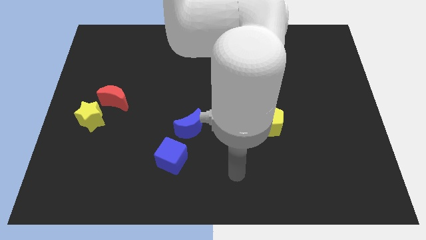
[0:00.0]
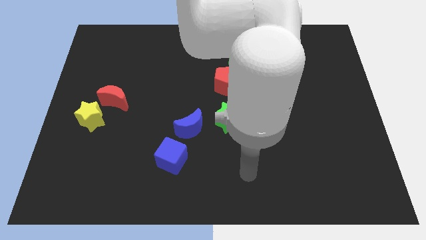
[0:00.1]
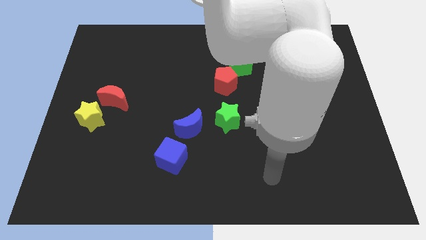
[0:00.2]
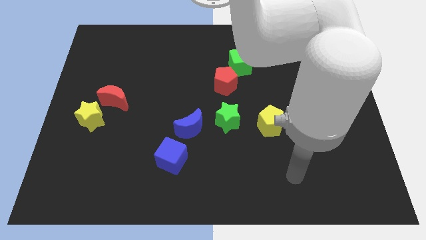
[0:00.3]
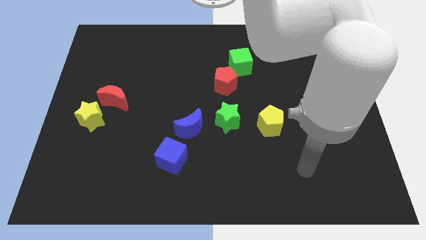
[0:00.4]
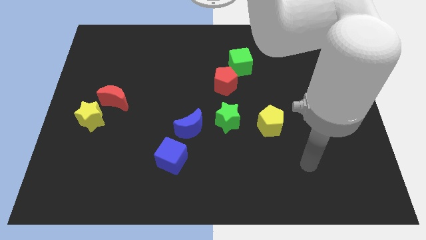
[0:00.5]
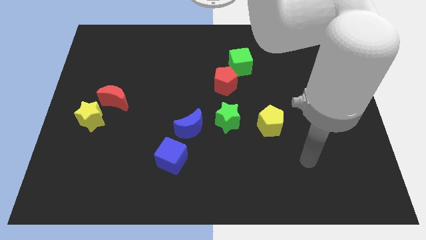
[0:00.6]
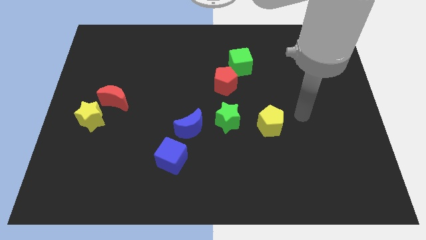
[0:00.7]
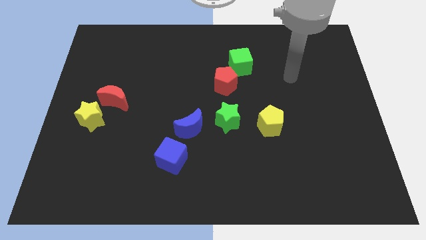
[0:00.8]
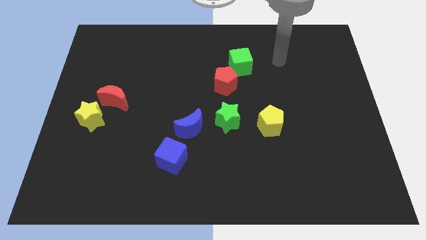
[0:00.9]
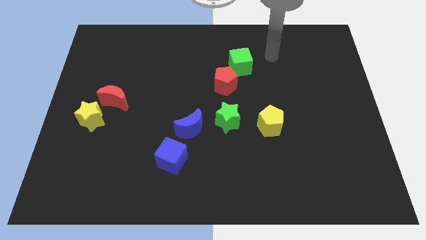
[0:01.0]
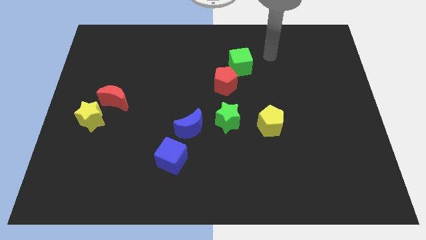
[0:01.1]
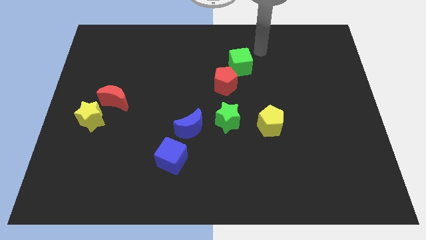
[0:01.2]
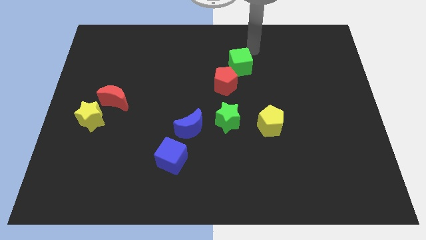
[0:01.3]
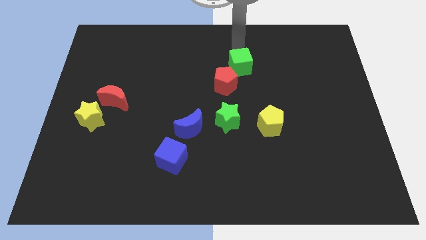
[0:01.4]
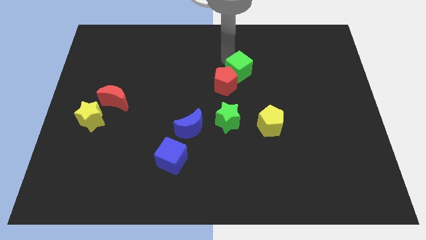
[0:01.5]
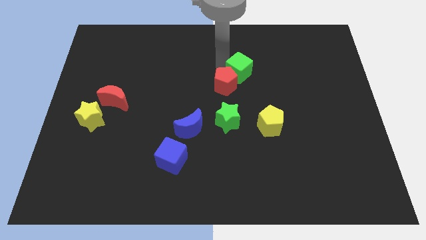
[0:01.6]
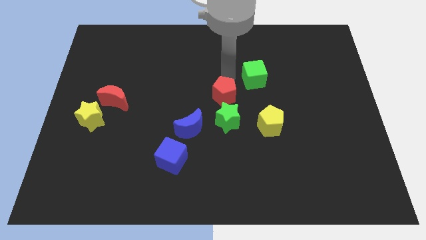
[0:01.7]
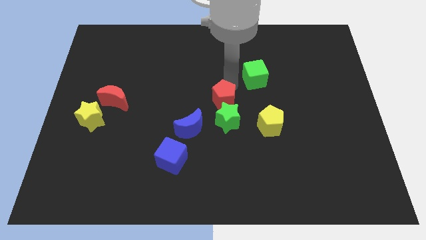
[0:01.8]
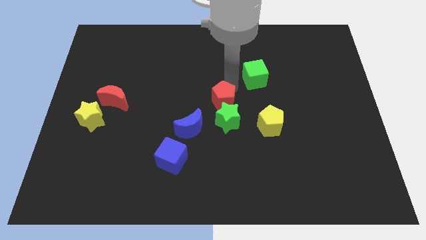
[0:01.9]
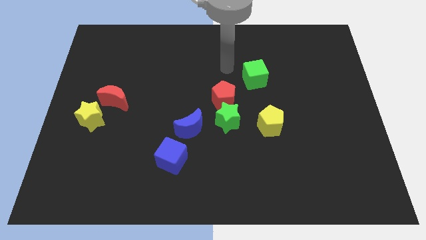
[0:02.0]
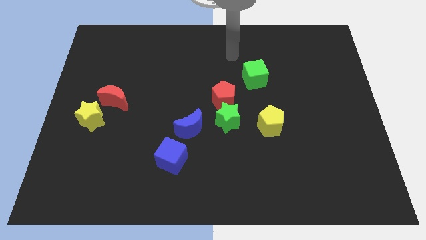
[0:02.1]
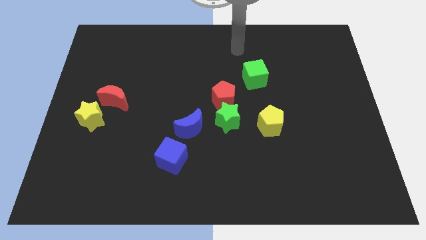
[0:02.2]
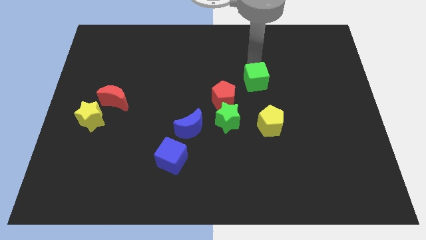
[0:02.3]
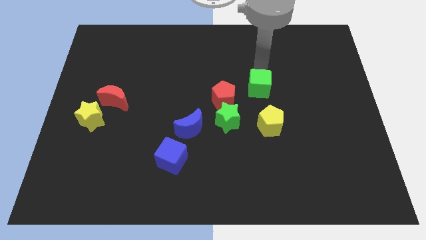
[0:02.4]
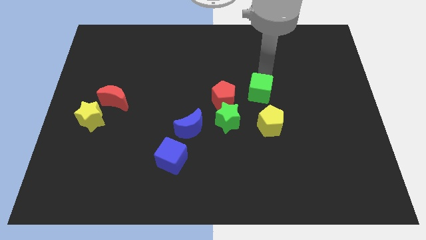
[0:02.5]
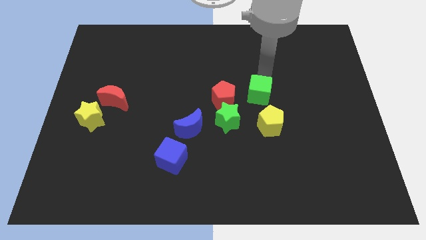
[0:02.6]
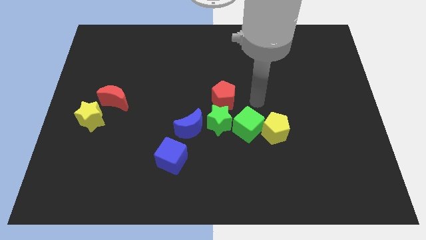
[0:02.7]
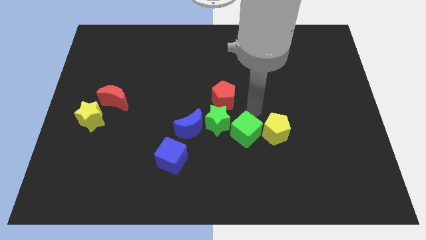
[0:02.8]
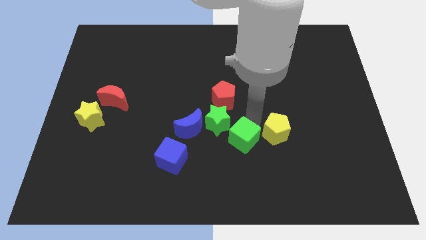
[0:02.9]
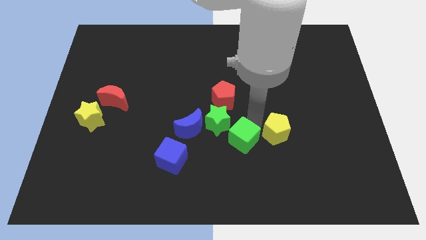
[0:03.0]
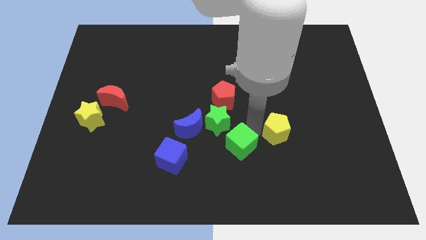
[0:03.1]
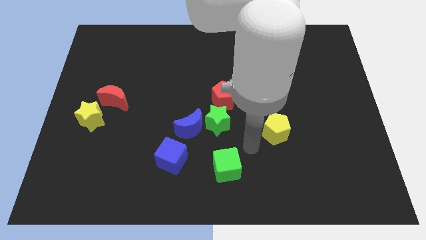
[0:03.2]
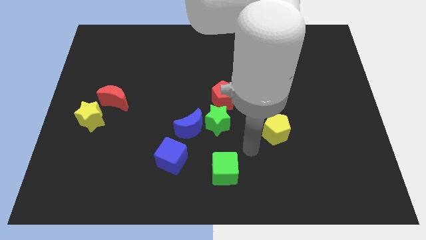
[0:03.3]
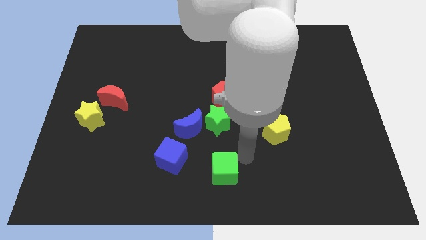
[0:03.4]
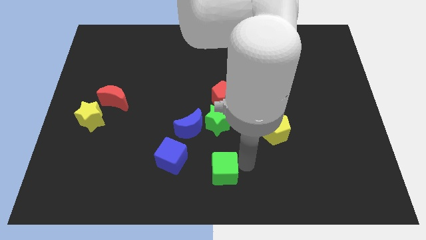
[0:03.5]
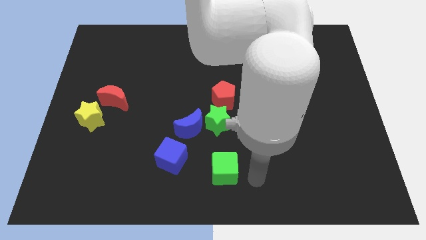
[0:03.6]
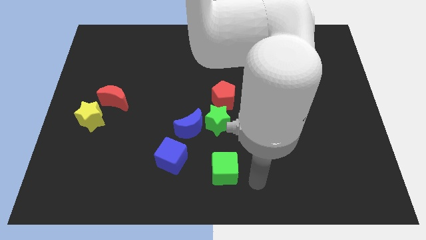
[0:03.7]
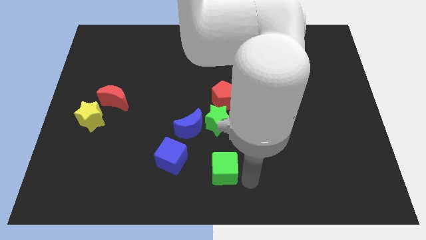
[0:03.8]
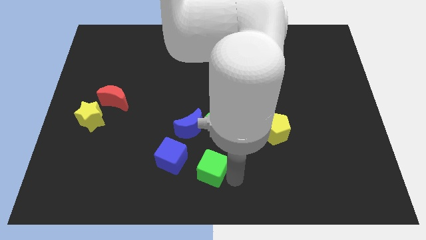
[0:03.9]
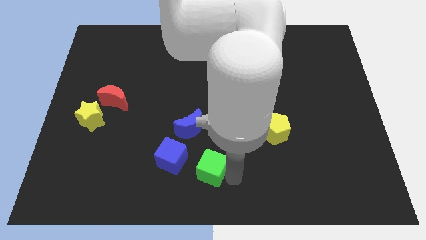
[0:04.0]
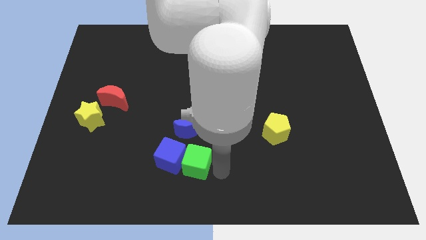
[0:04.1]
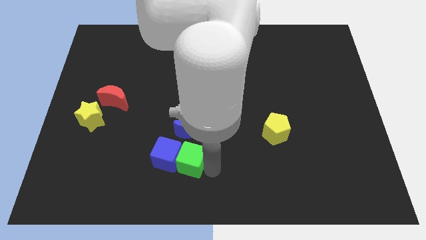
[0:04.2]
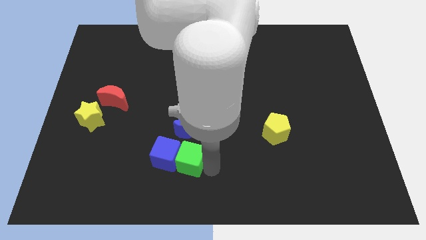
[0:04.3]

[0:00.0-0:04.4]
push the green cube to the blue cube

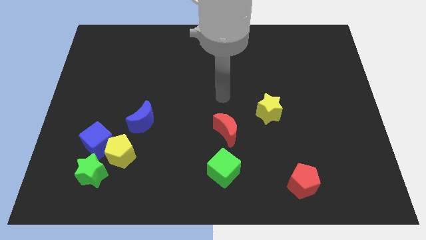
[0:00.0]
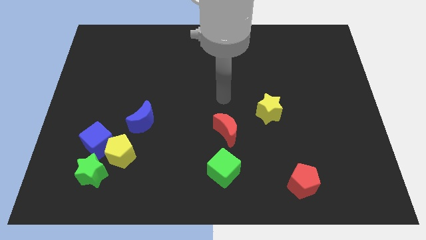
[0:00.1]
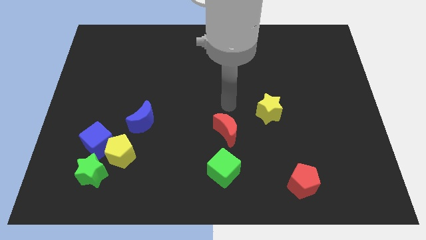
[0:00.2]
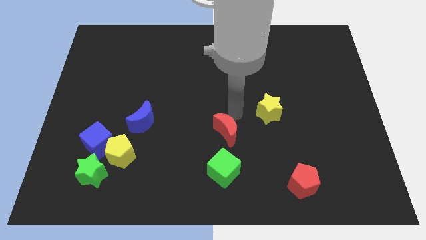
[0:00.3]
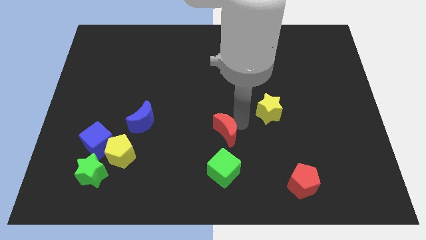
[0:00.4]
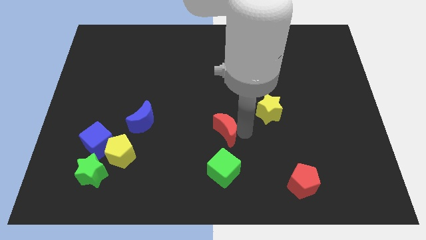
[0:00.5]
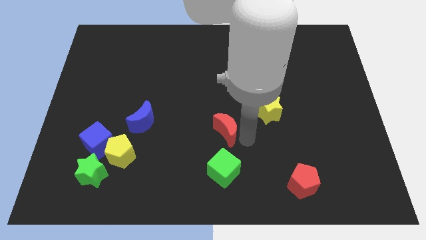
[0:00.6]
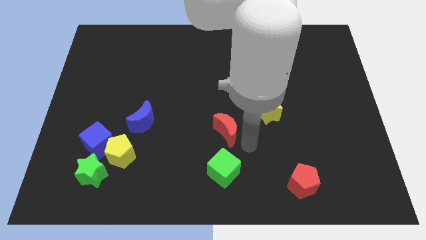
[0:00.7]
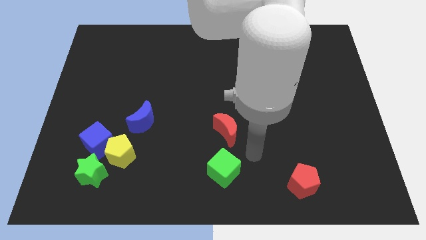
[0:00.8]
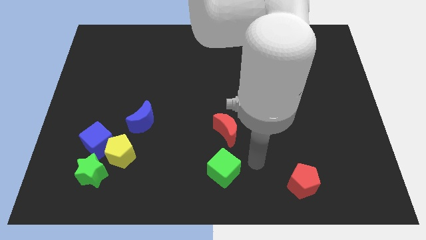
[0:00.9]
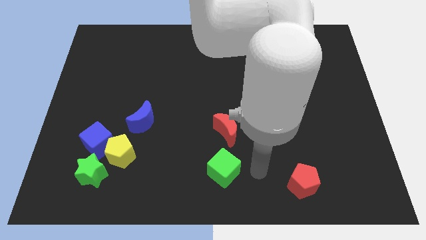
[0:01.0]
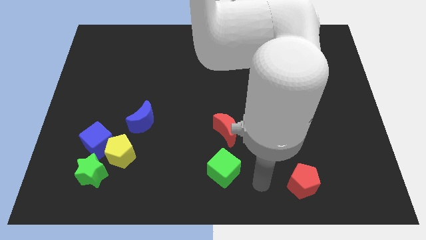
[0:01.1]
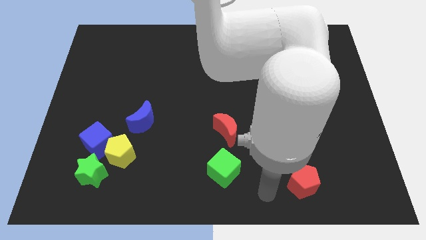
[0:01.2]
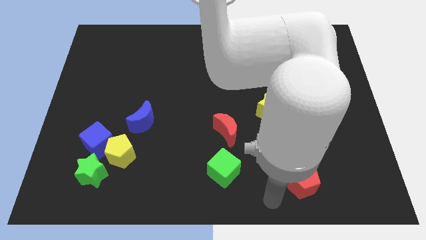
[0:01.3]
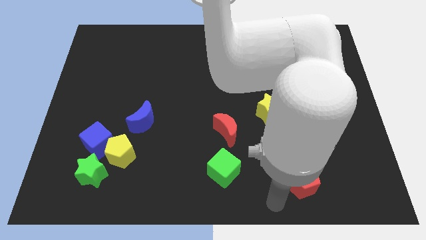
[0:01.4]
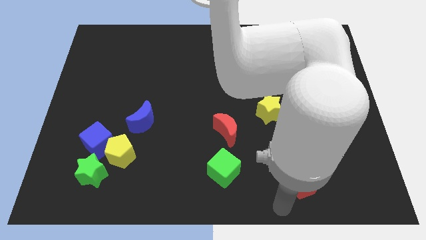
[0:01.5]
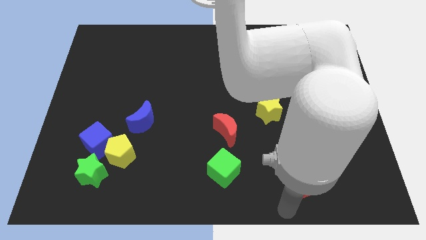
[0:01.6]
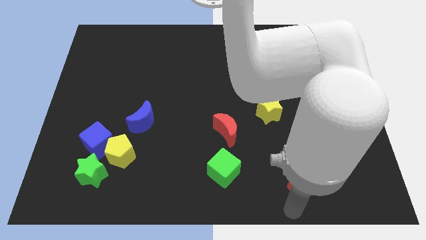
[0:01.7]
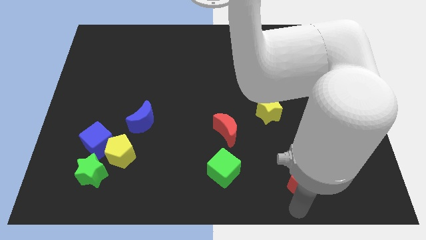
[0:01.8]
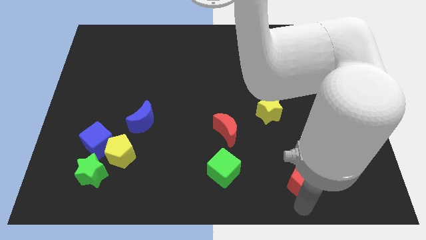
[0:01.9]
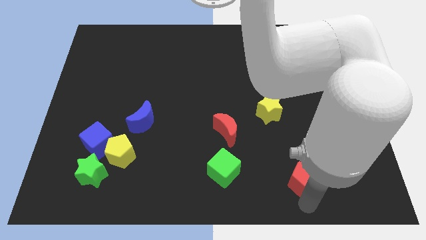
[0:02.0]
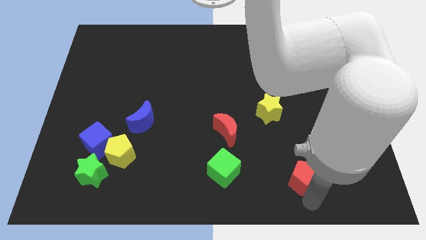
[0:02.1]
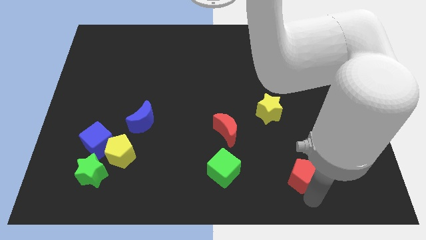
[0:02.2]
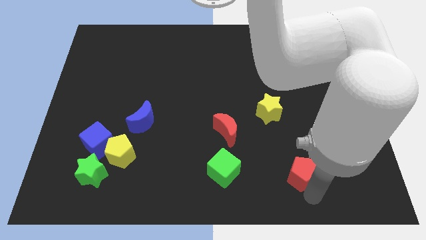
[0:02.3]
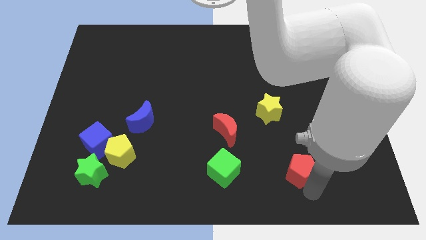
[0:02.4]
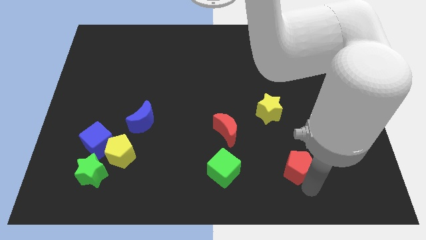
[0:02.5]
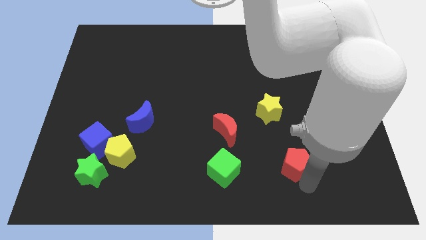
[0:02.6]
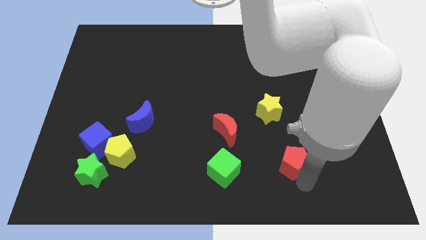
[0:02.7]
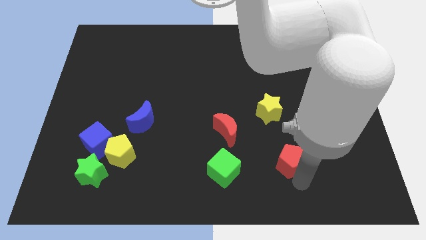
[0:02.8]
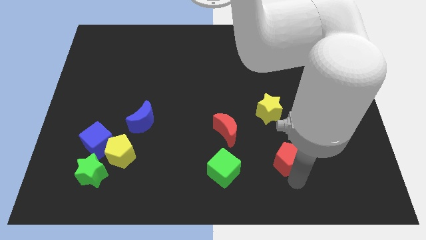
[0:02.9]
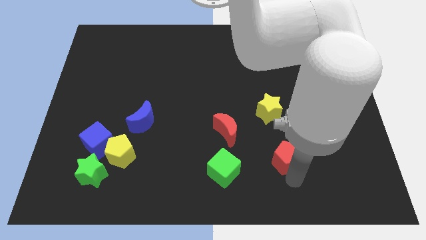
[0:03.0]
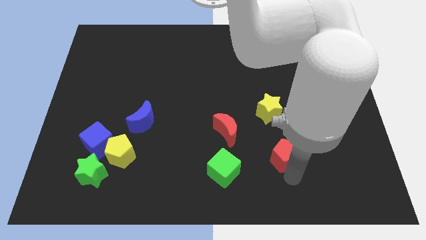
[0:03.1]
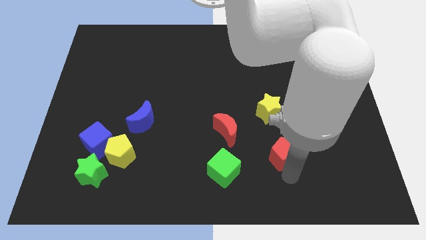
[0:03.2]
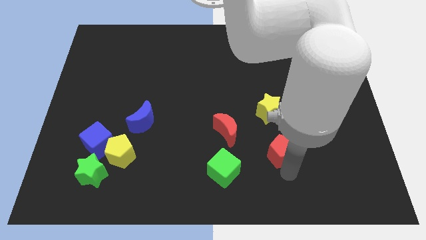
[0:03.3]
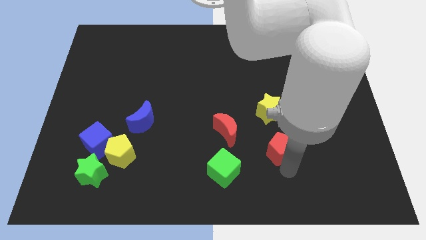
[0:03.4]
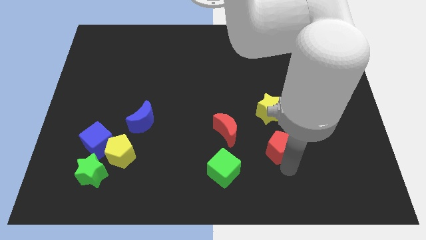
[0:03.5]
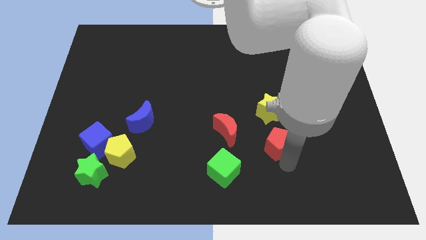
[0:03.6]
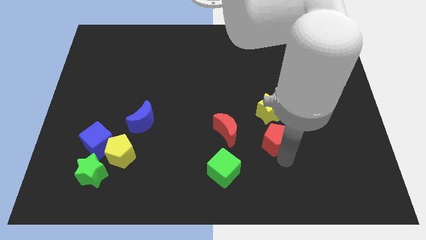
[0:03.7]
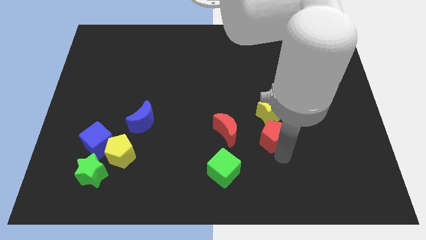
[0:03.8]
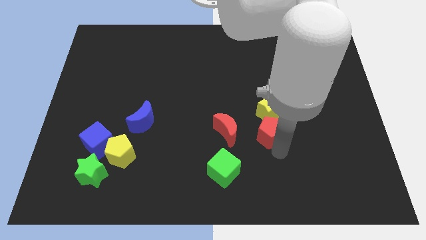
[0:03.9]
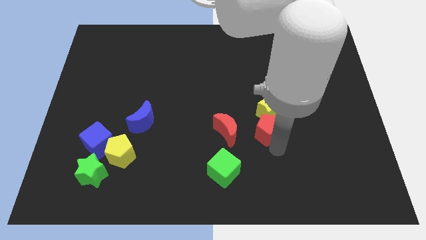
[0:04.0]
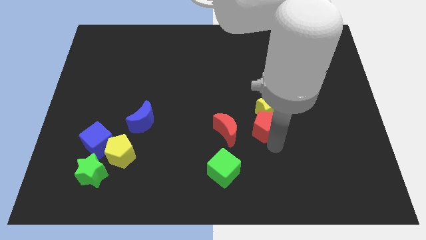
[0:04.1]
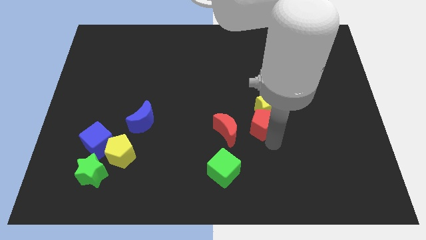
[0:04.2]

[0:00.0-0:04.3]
move the red pentagon next to the yellow star
